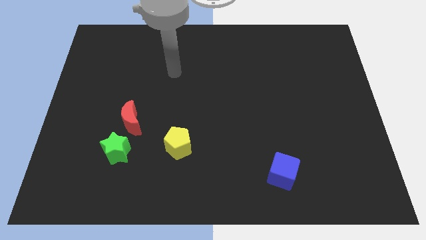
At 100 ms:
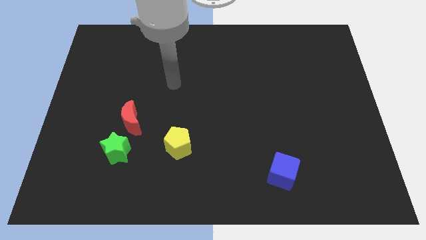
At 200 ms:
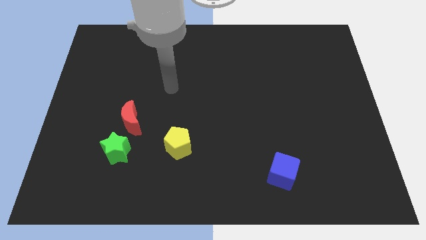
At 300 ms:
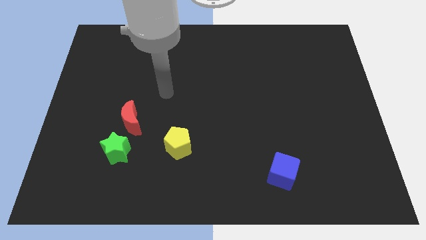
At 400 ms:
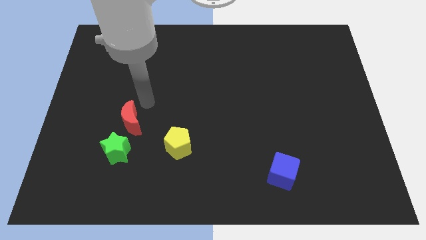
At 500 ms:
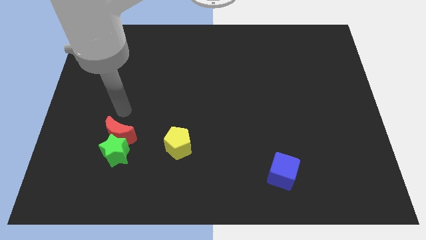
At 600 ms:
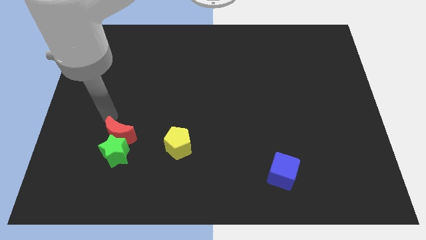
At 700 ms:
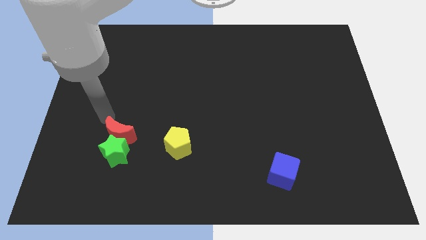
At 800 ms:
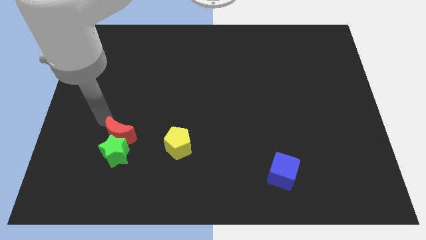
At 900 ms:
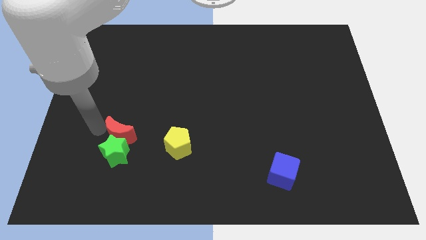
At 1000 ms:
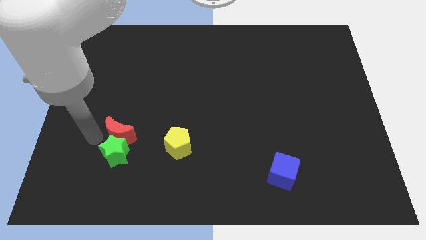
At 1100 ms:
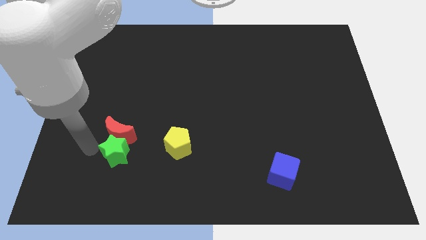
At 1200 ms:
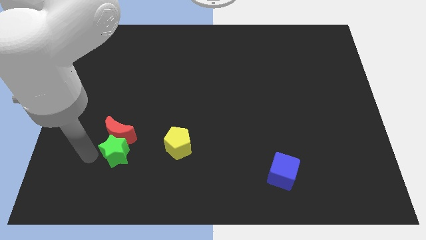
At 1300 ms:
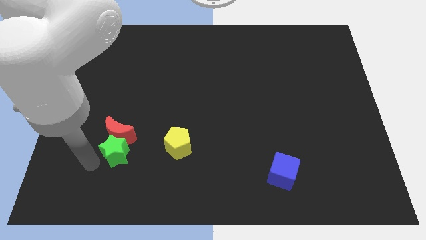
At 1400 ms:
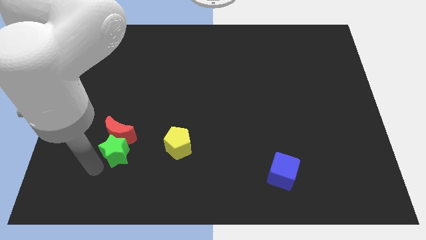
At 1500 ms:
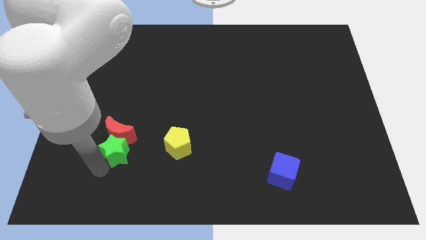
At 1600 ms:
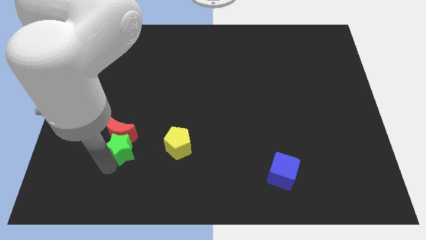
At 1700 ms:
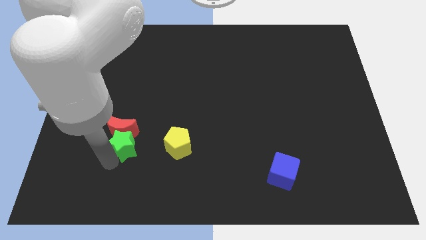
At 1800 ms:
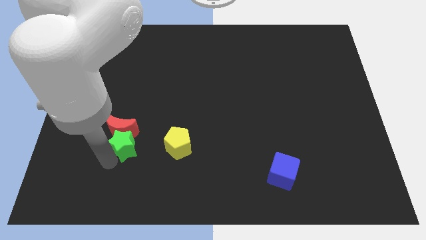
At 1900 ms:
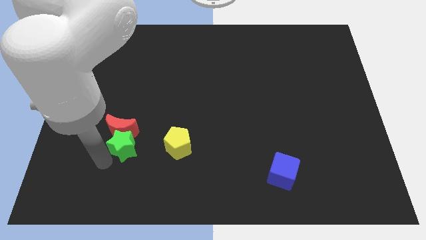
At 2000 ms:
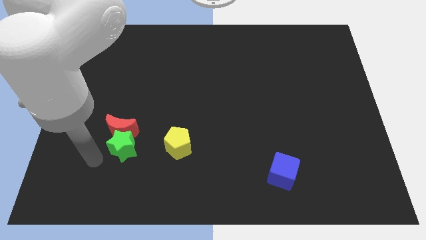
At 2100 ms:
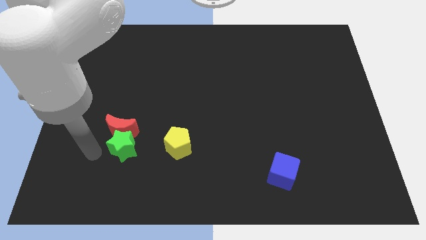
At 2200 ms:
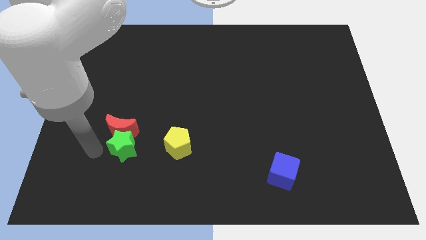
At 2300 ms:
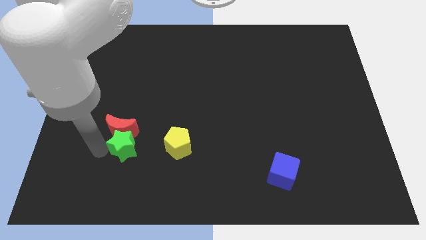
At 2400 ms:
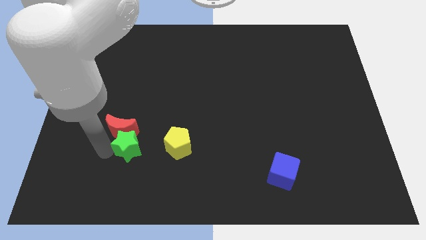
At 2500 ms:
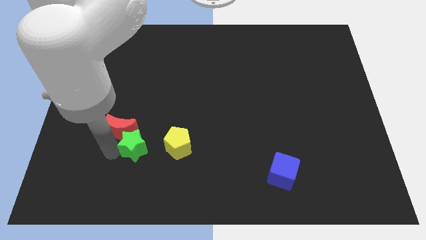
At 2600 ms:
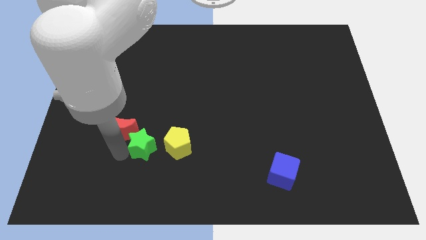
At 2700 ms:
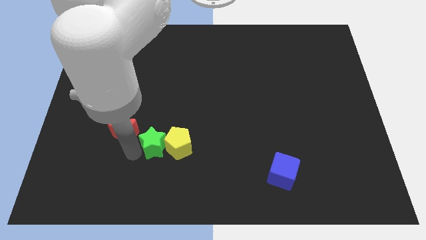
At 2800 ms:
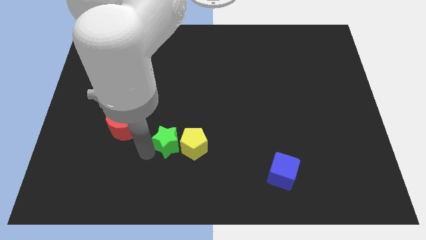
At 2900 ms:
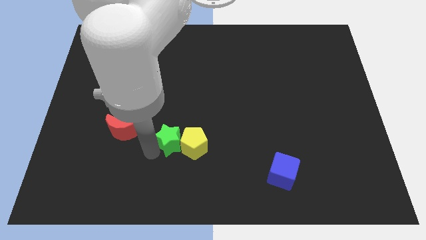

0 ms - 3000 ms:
slide the green block close to the yellow pentagon

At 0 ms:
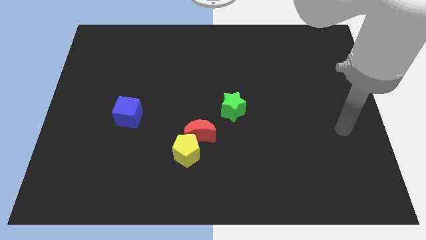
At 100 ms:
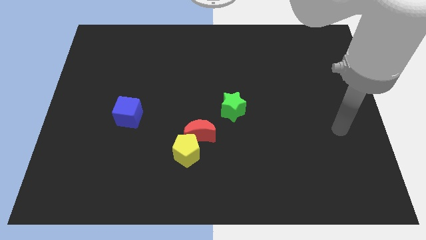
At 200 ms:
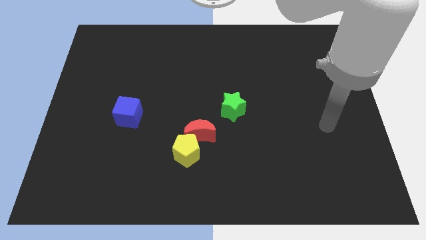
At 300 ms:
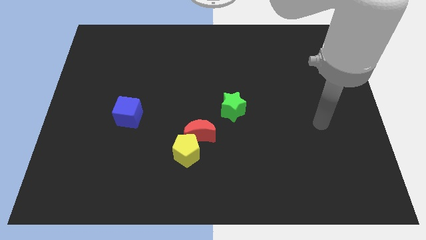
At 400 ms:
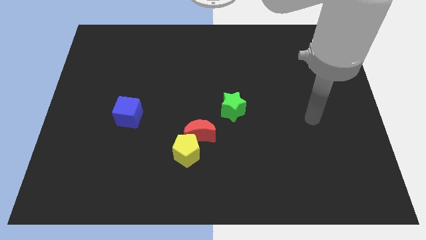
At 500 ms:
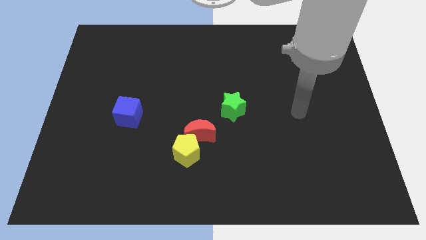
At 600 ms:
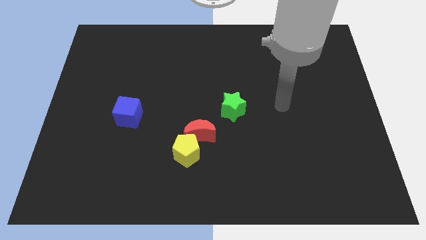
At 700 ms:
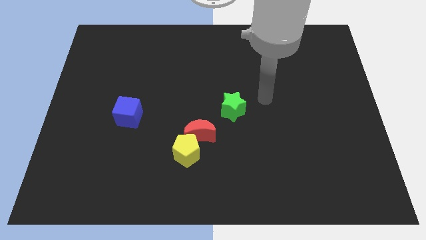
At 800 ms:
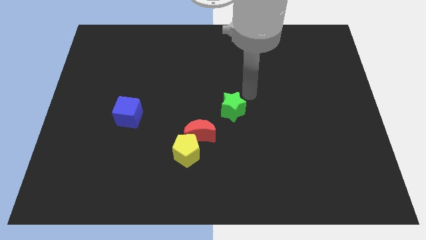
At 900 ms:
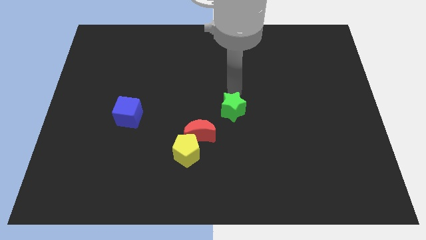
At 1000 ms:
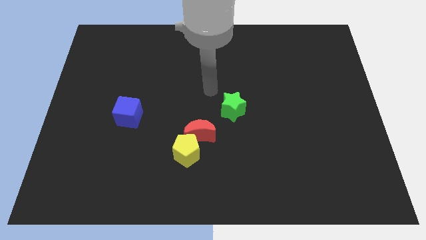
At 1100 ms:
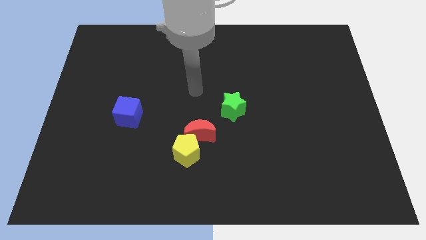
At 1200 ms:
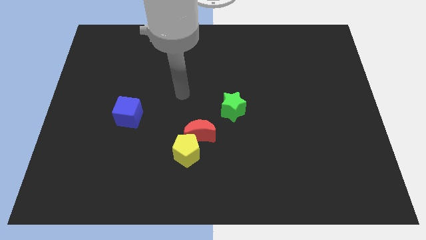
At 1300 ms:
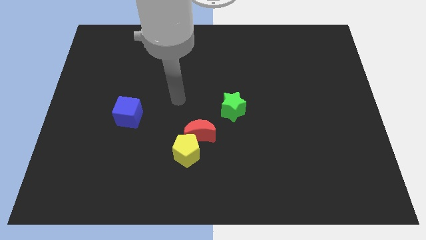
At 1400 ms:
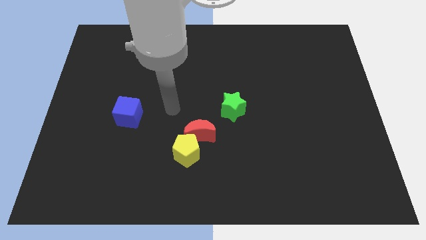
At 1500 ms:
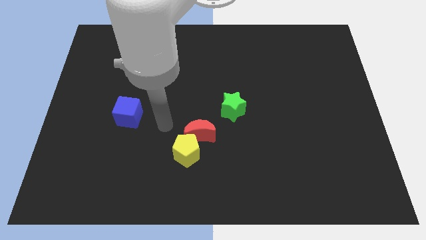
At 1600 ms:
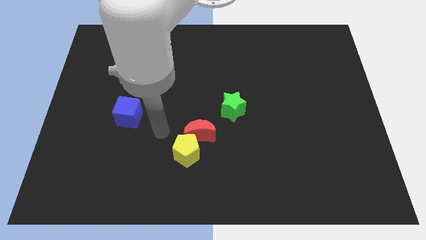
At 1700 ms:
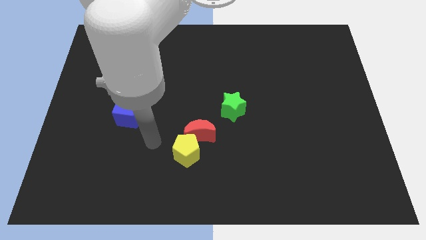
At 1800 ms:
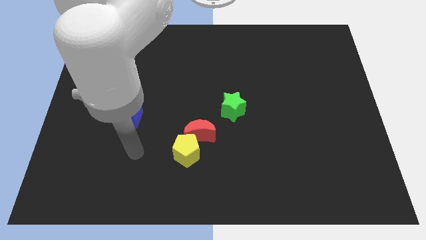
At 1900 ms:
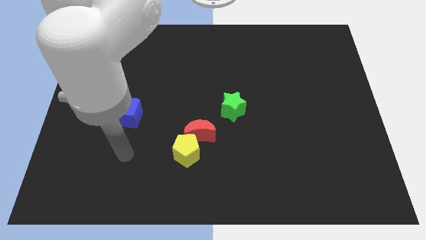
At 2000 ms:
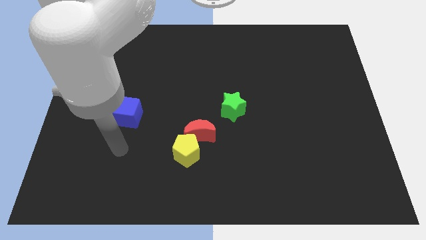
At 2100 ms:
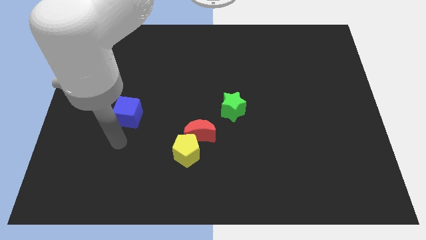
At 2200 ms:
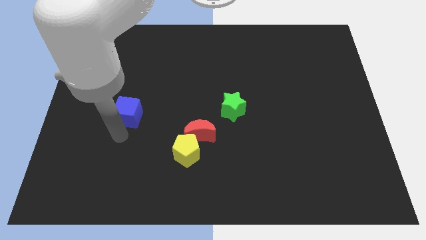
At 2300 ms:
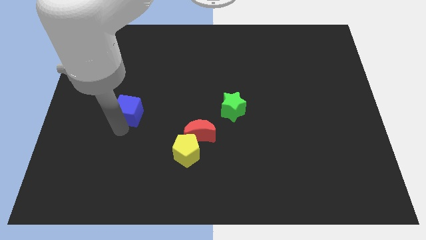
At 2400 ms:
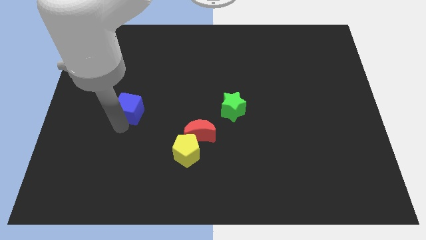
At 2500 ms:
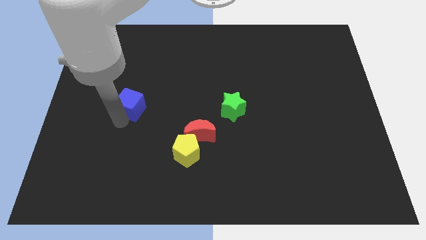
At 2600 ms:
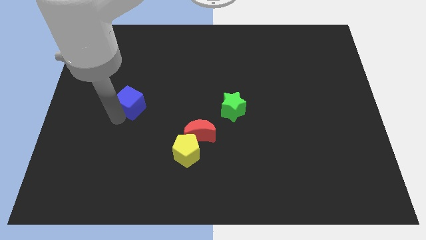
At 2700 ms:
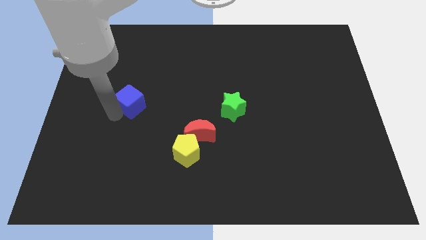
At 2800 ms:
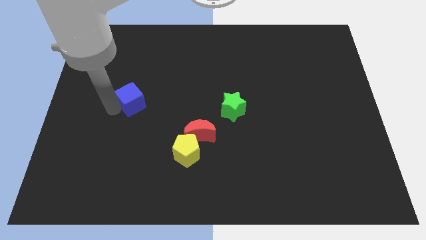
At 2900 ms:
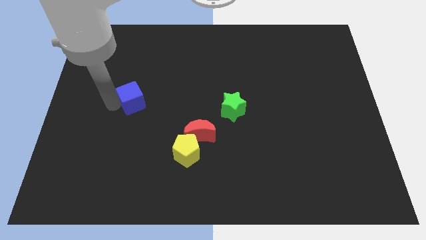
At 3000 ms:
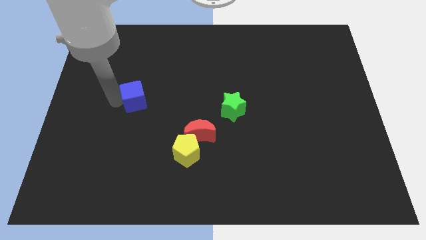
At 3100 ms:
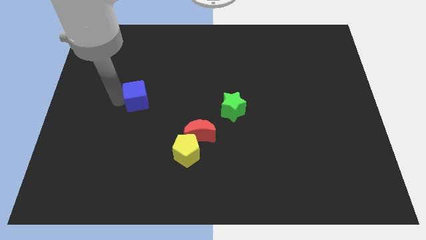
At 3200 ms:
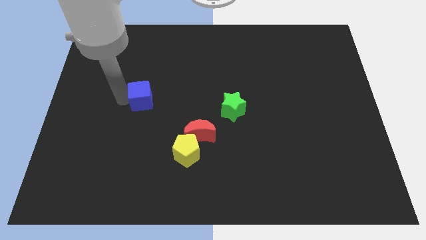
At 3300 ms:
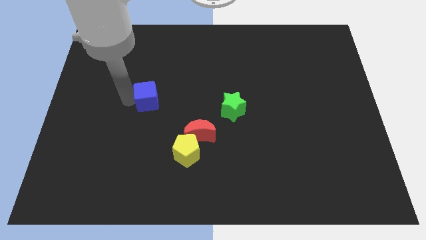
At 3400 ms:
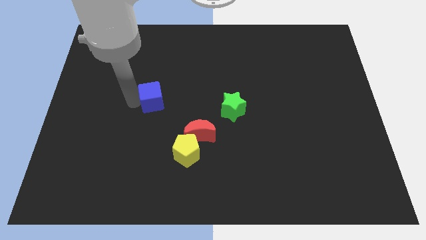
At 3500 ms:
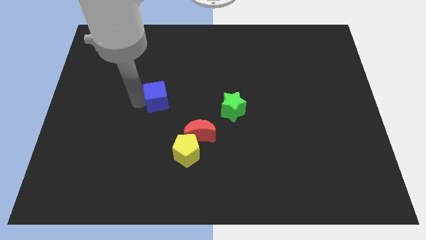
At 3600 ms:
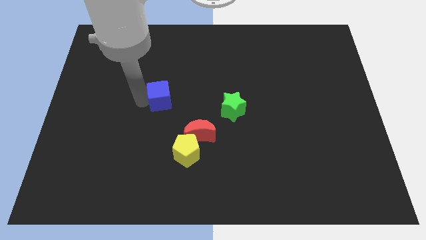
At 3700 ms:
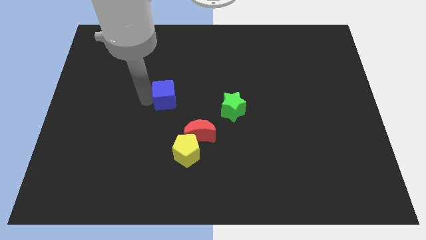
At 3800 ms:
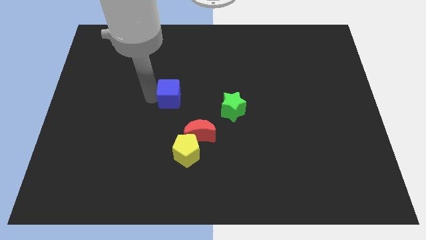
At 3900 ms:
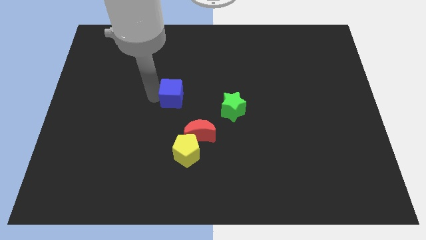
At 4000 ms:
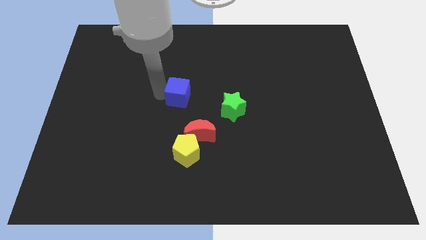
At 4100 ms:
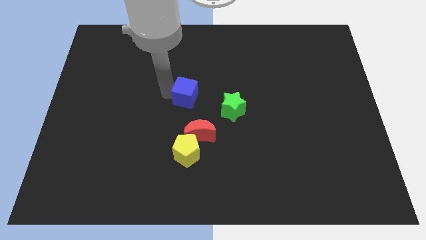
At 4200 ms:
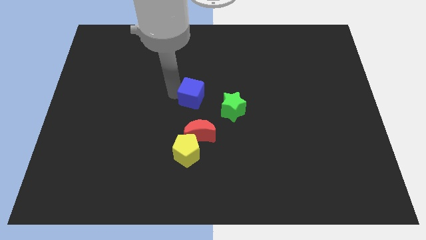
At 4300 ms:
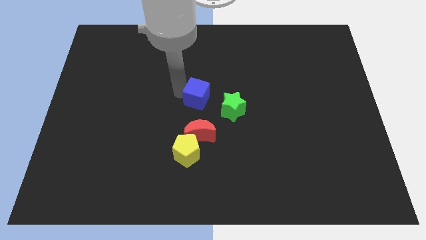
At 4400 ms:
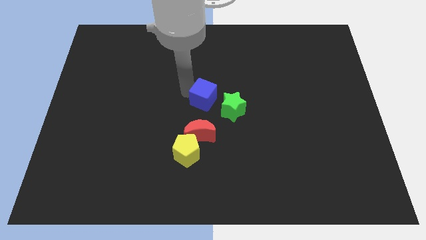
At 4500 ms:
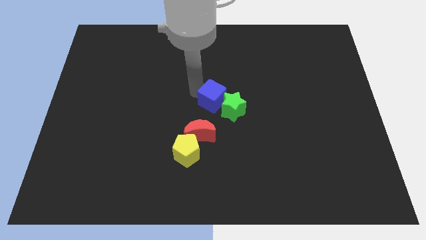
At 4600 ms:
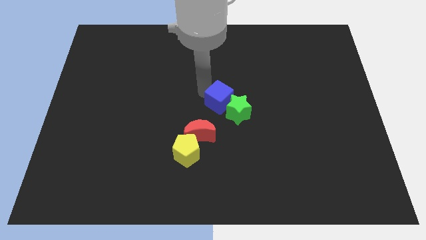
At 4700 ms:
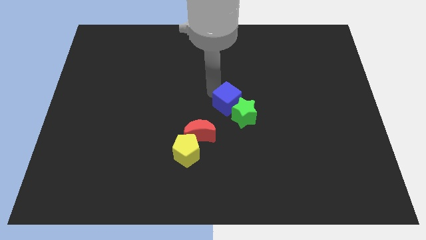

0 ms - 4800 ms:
push the blue cube to the star

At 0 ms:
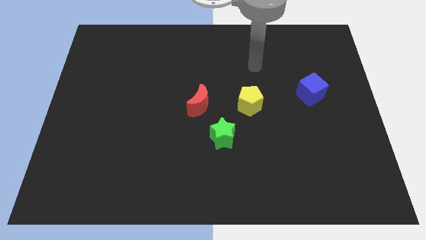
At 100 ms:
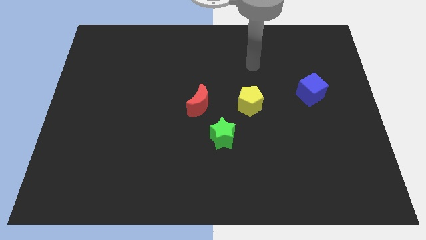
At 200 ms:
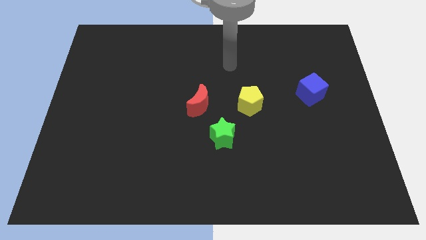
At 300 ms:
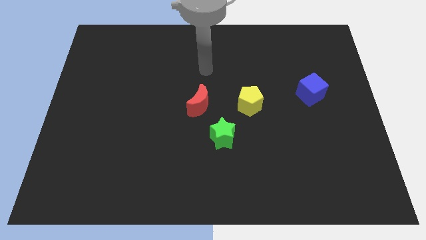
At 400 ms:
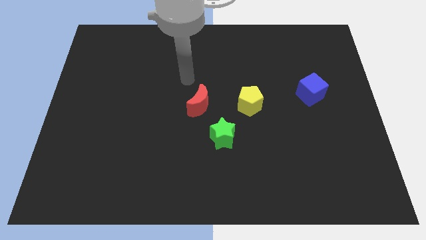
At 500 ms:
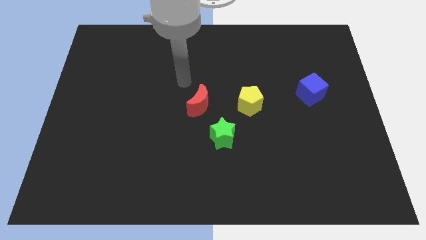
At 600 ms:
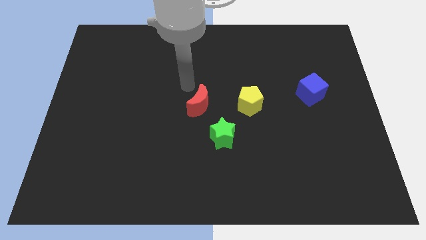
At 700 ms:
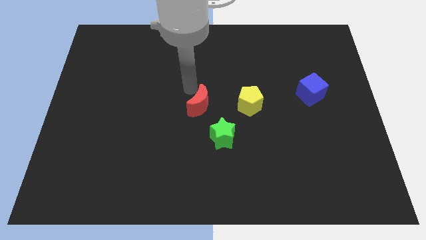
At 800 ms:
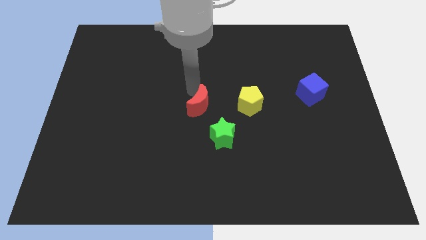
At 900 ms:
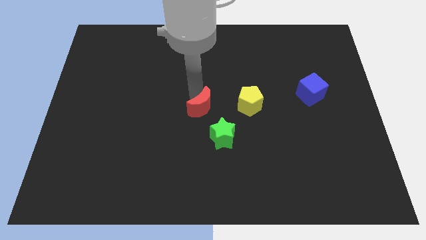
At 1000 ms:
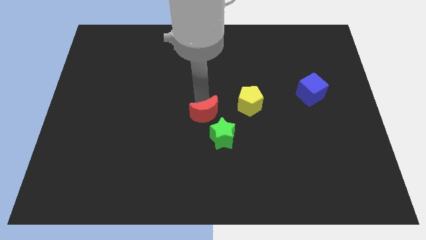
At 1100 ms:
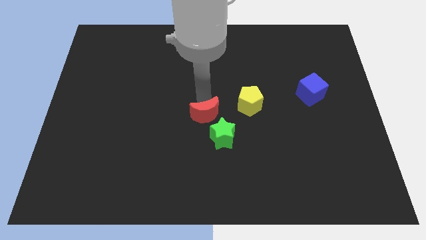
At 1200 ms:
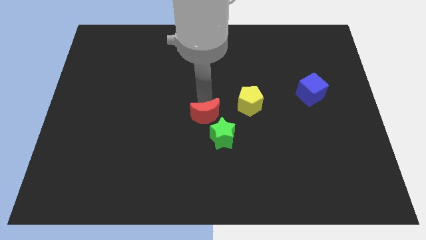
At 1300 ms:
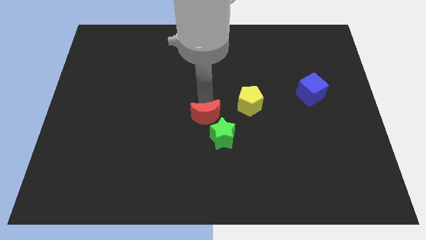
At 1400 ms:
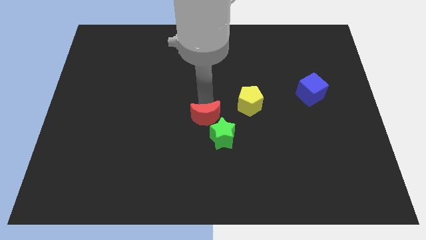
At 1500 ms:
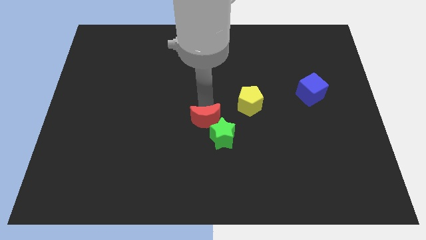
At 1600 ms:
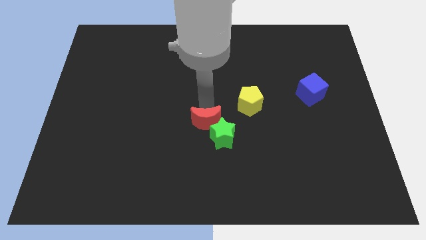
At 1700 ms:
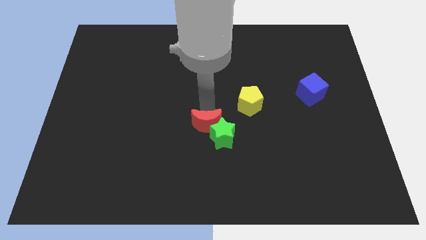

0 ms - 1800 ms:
put the moon close to the green star
